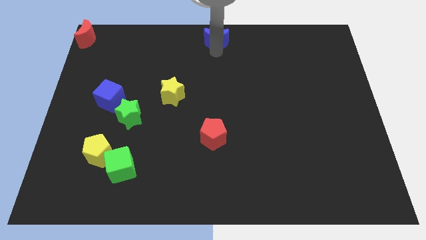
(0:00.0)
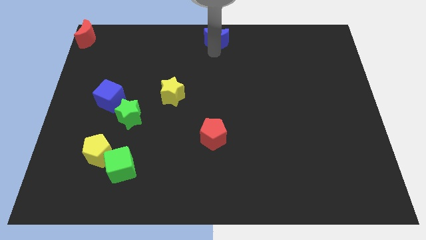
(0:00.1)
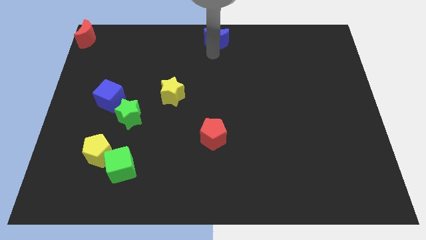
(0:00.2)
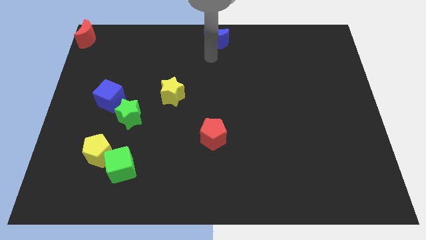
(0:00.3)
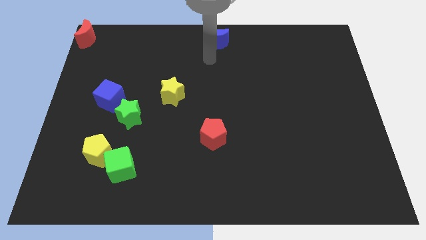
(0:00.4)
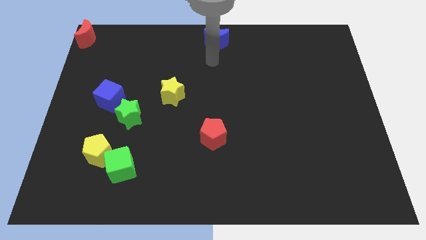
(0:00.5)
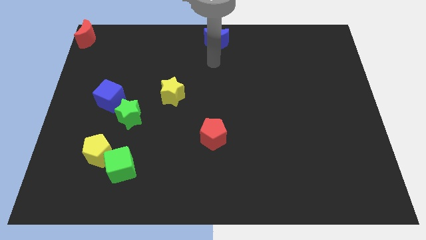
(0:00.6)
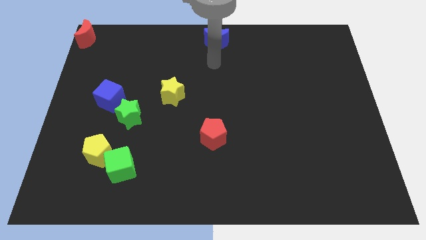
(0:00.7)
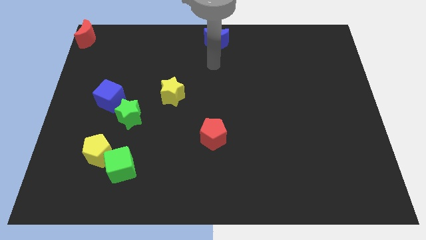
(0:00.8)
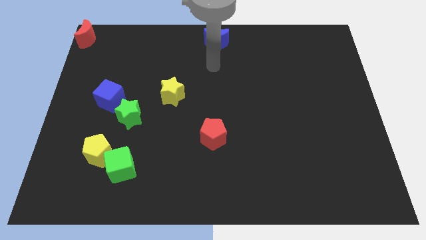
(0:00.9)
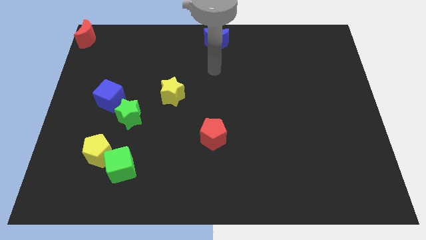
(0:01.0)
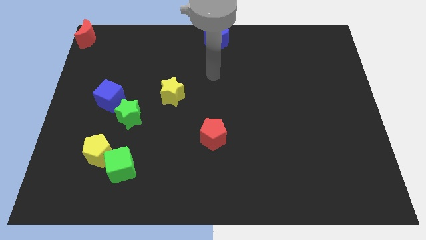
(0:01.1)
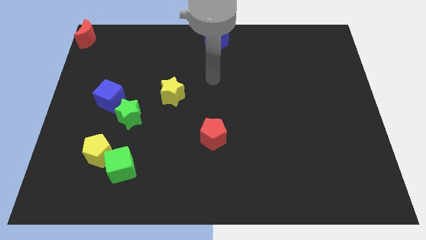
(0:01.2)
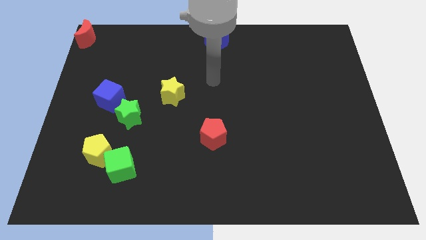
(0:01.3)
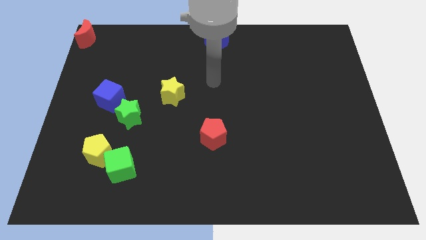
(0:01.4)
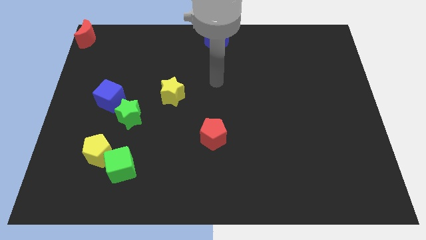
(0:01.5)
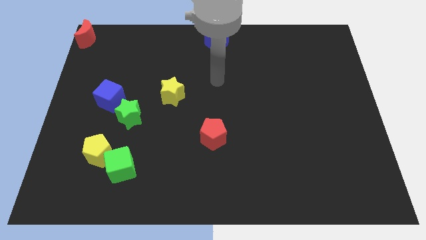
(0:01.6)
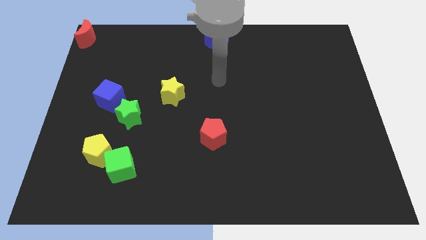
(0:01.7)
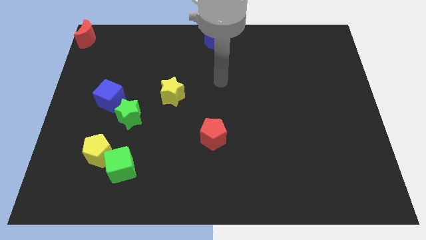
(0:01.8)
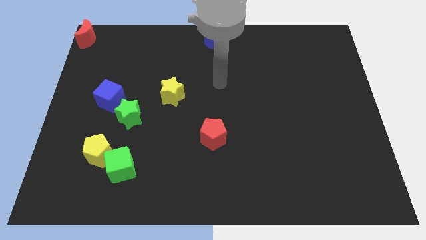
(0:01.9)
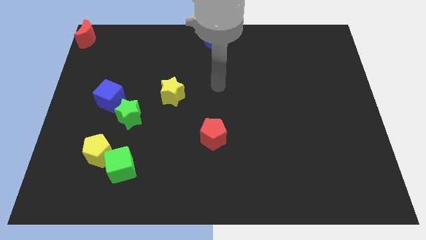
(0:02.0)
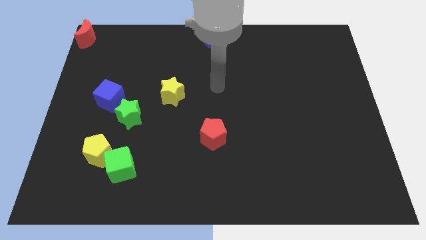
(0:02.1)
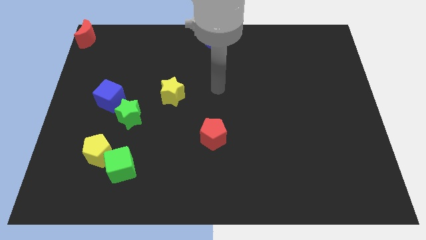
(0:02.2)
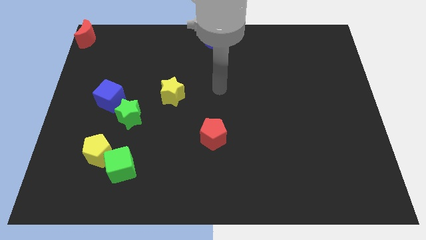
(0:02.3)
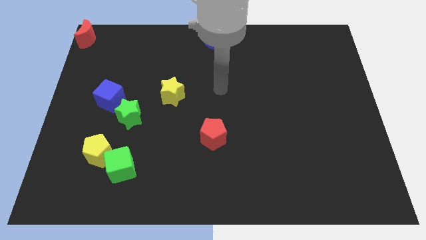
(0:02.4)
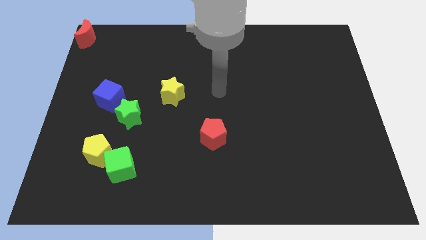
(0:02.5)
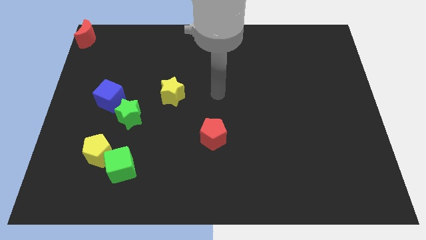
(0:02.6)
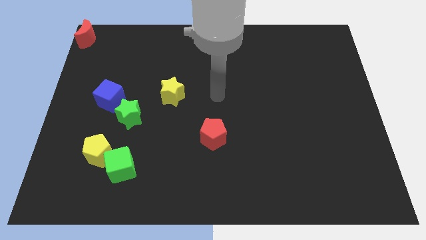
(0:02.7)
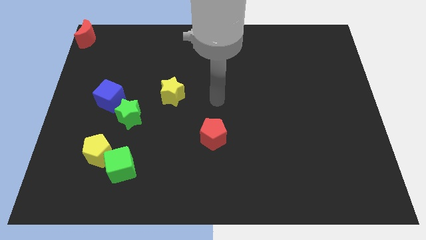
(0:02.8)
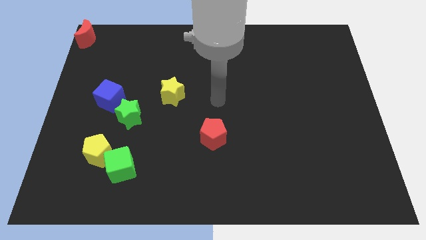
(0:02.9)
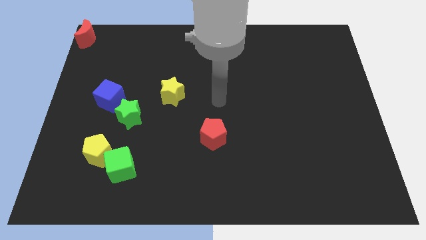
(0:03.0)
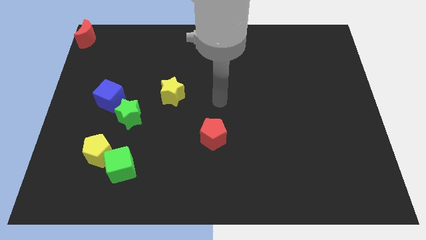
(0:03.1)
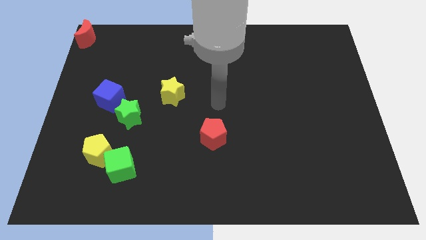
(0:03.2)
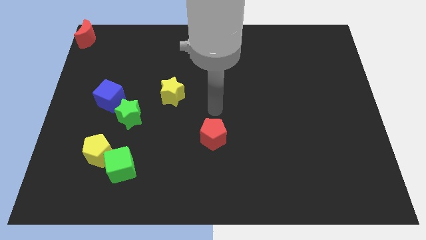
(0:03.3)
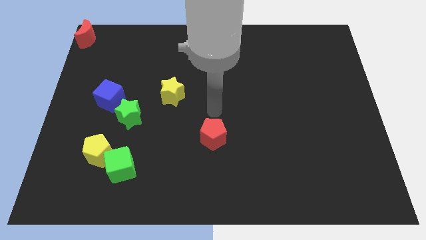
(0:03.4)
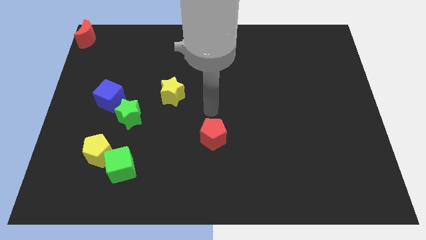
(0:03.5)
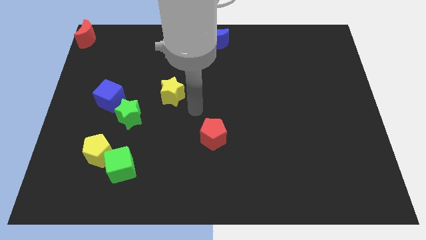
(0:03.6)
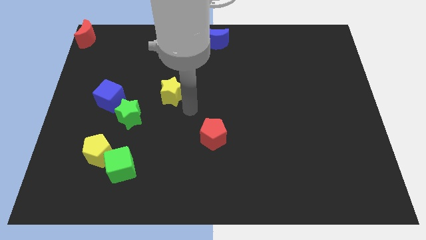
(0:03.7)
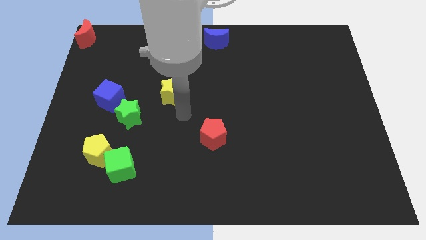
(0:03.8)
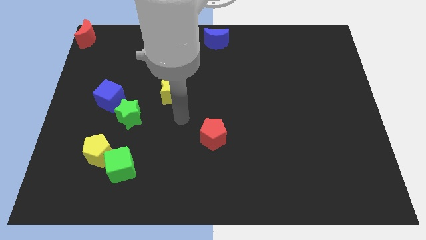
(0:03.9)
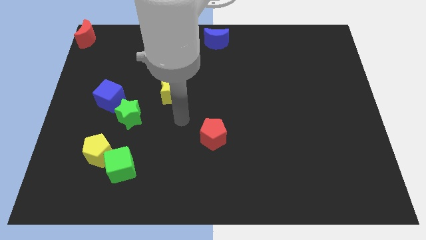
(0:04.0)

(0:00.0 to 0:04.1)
move the arm away from the blue moon

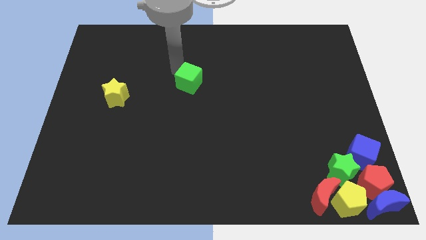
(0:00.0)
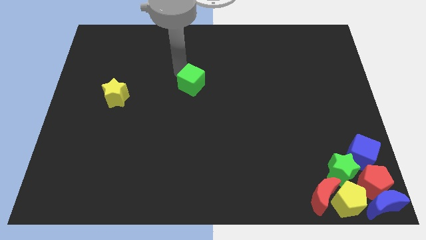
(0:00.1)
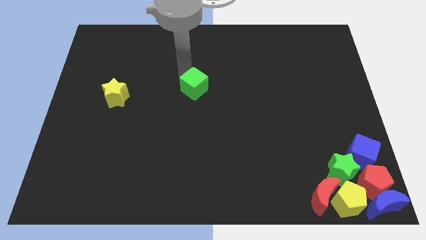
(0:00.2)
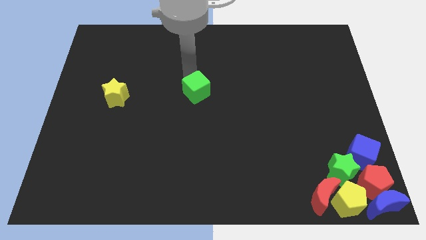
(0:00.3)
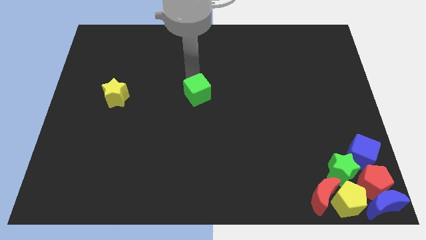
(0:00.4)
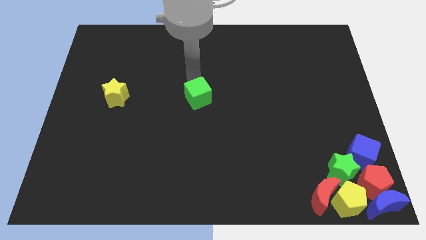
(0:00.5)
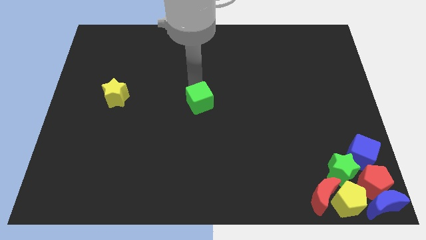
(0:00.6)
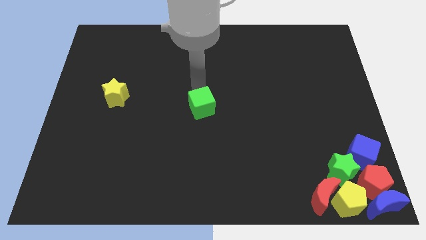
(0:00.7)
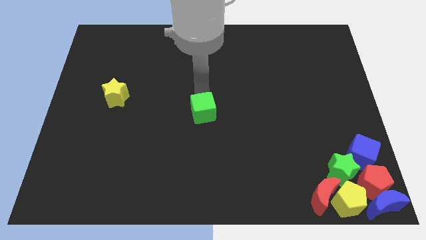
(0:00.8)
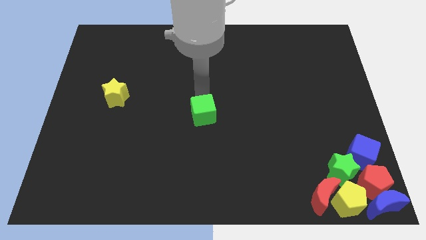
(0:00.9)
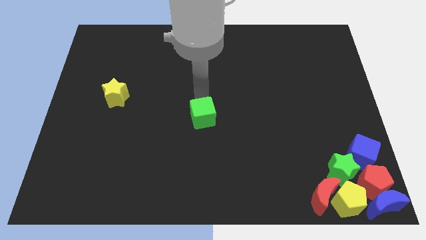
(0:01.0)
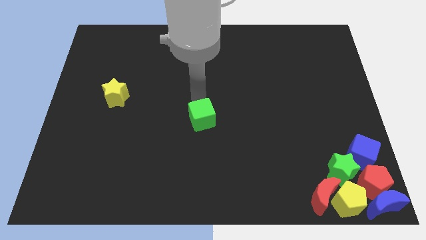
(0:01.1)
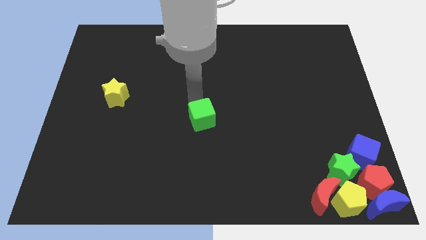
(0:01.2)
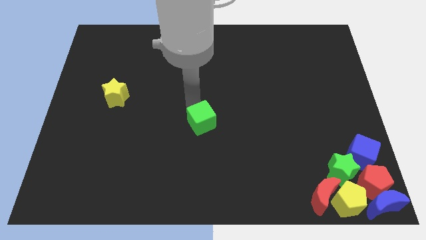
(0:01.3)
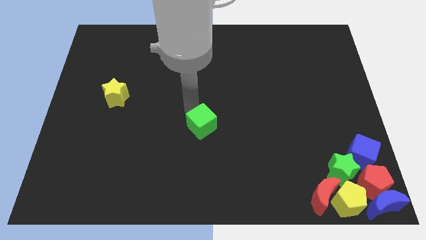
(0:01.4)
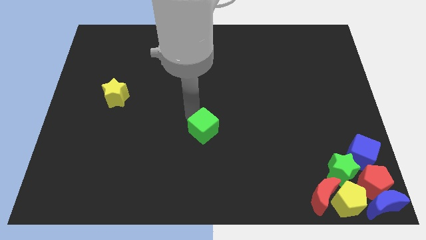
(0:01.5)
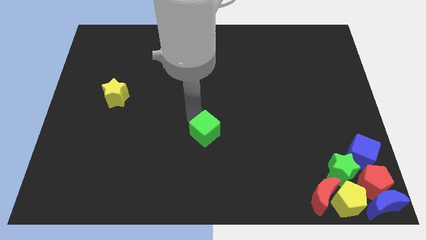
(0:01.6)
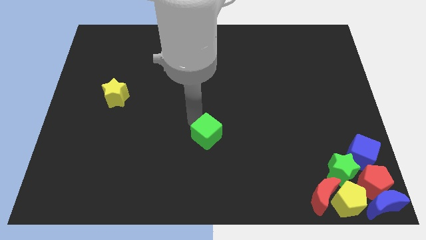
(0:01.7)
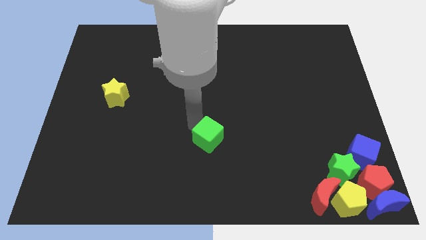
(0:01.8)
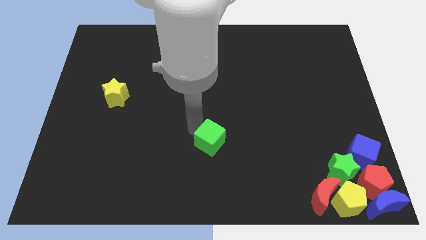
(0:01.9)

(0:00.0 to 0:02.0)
push the green cube slightly downwards

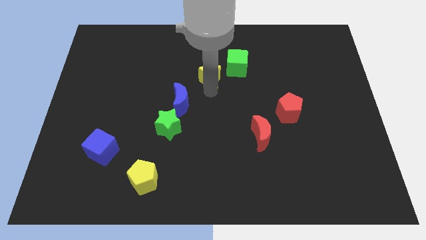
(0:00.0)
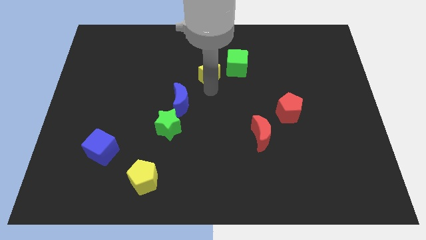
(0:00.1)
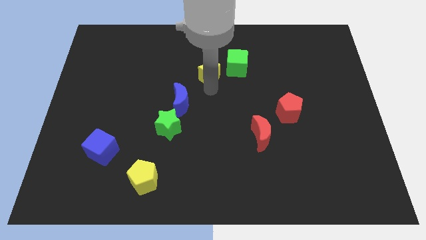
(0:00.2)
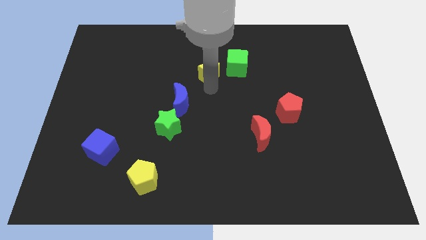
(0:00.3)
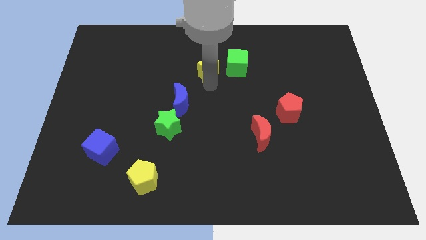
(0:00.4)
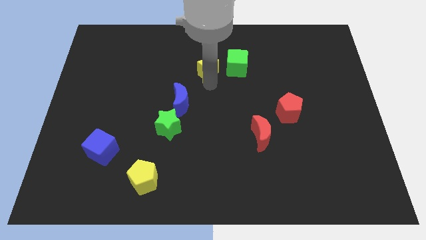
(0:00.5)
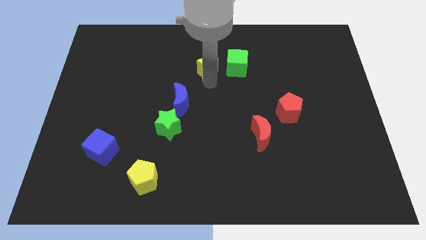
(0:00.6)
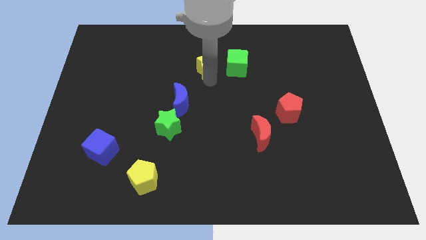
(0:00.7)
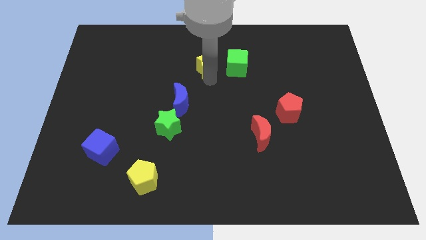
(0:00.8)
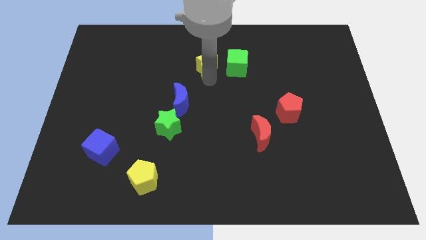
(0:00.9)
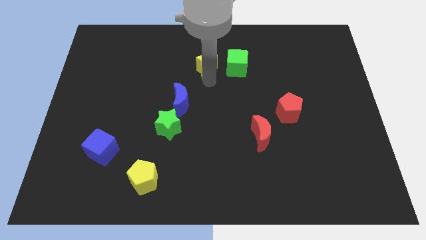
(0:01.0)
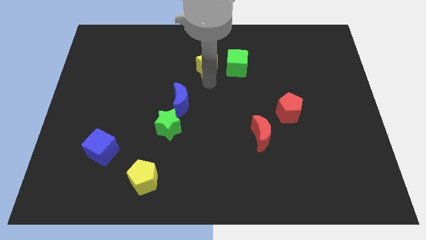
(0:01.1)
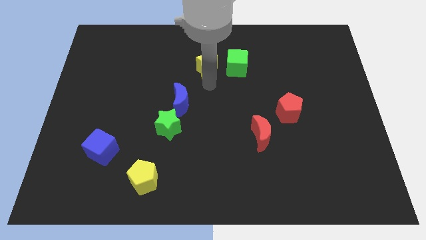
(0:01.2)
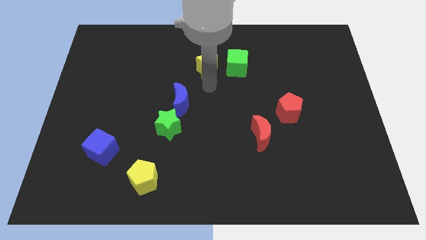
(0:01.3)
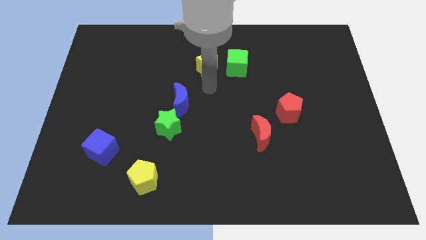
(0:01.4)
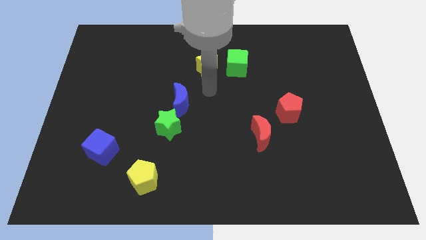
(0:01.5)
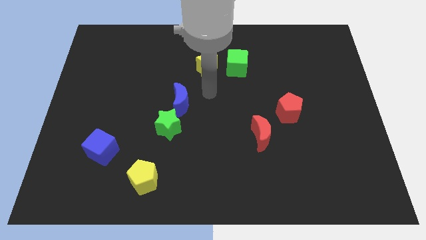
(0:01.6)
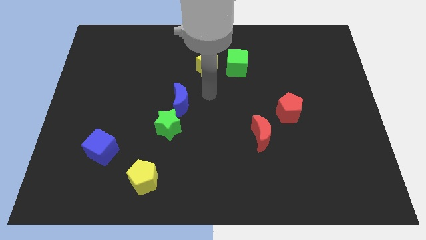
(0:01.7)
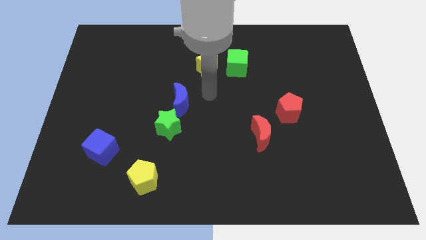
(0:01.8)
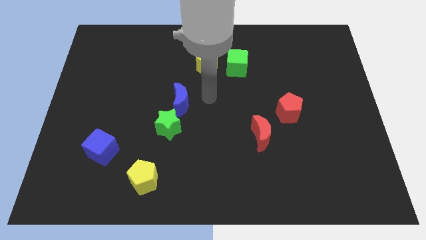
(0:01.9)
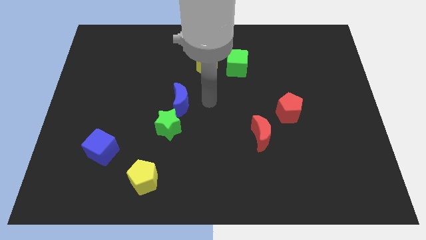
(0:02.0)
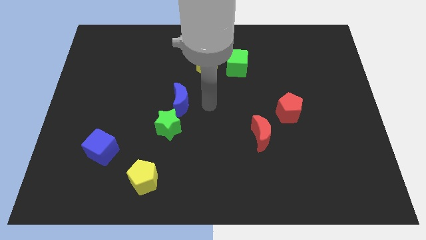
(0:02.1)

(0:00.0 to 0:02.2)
push the yellow star slightly to the top side of the board

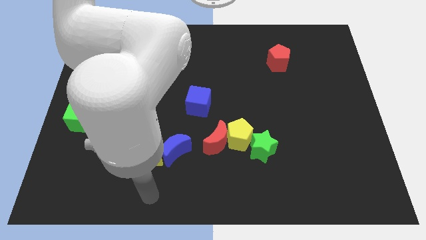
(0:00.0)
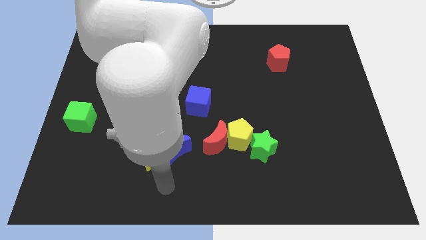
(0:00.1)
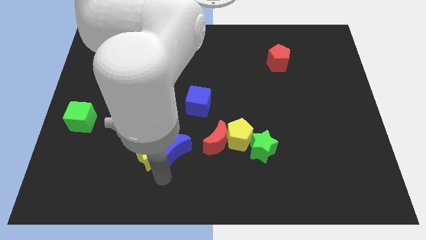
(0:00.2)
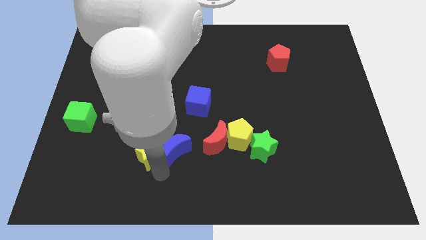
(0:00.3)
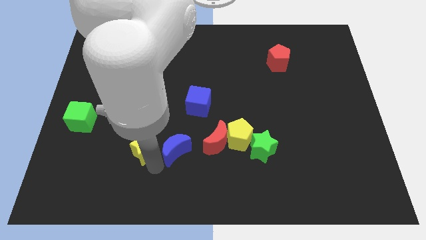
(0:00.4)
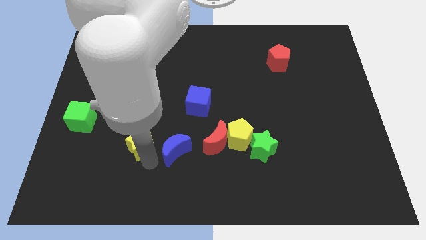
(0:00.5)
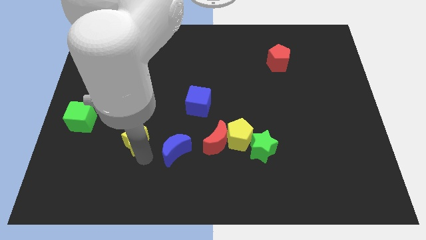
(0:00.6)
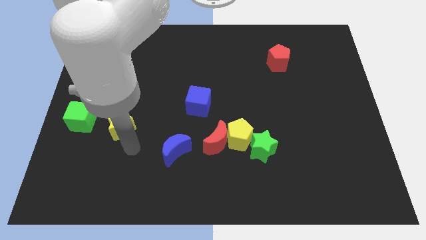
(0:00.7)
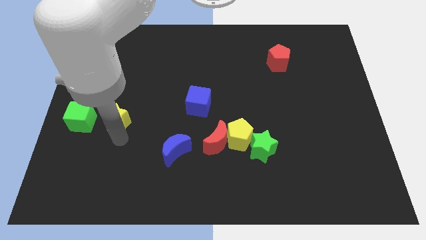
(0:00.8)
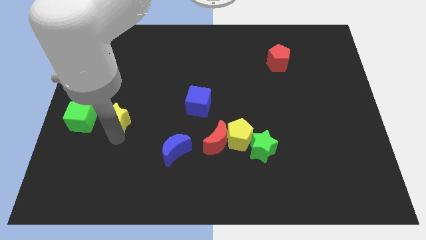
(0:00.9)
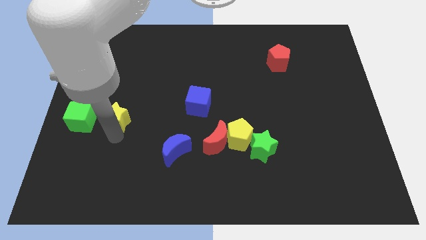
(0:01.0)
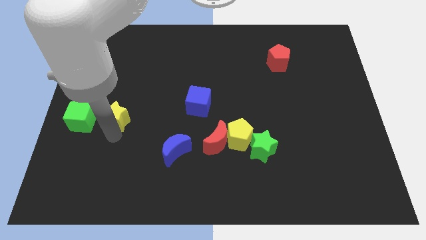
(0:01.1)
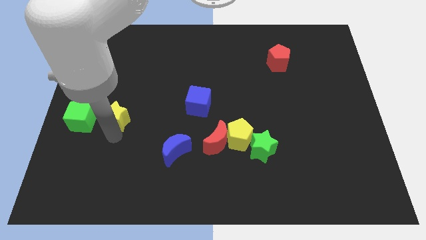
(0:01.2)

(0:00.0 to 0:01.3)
push yellow star beside green cube
